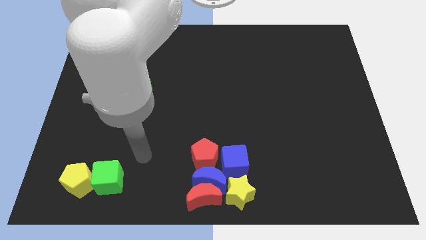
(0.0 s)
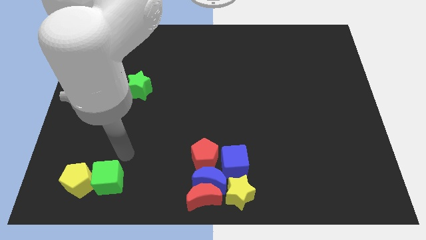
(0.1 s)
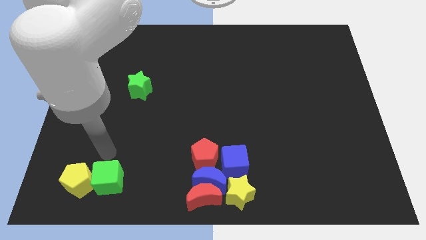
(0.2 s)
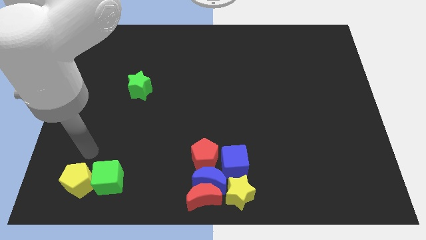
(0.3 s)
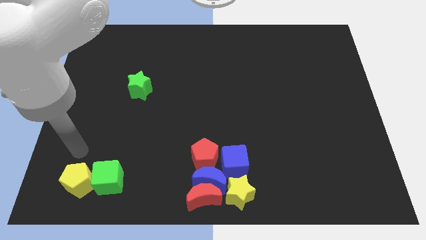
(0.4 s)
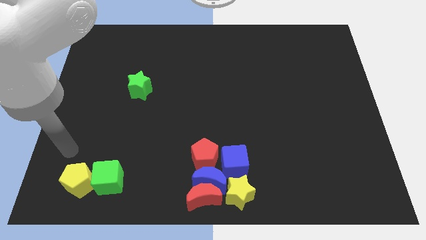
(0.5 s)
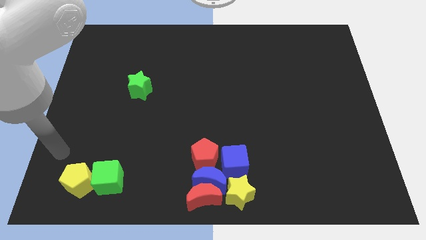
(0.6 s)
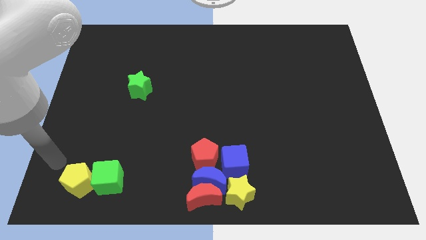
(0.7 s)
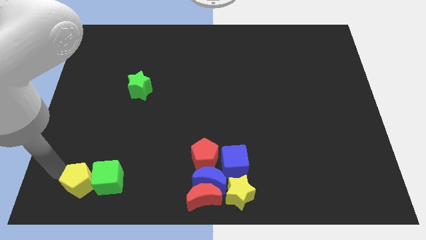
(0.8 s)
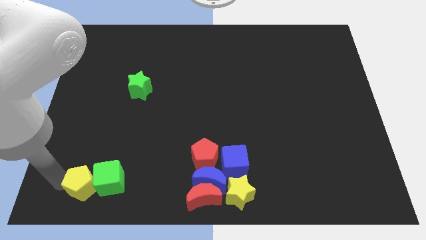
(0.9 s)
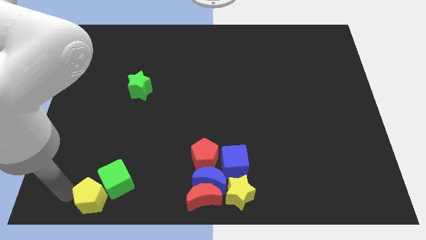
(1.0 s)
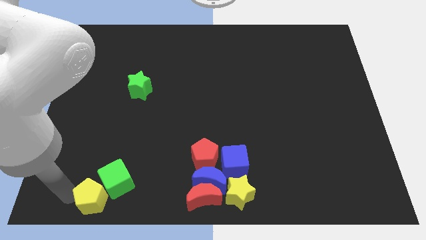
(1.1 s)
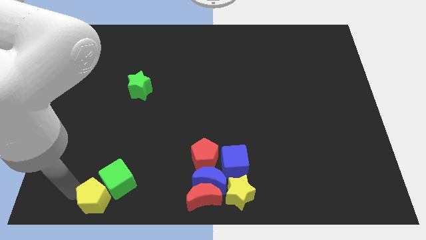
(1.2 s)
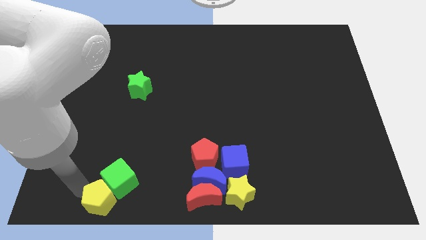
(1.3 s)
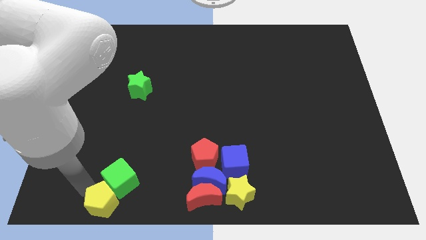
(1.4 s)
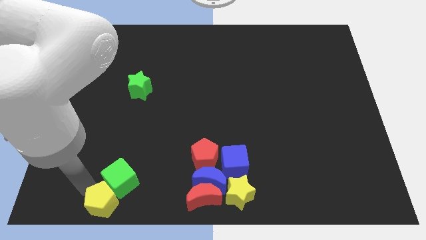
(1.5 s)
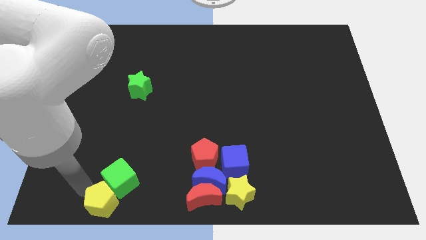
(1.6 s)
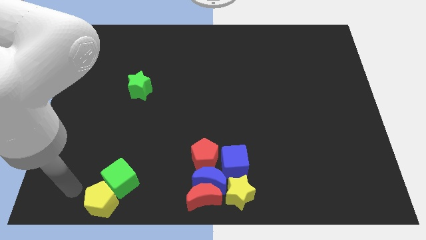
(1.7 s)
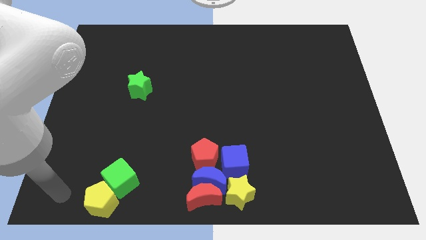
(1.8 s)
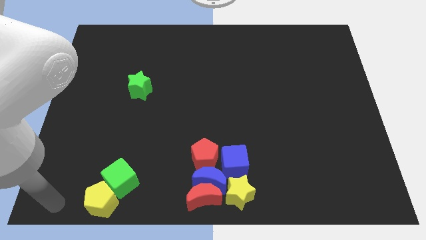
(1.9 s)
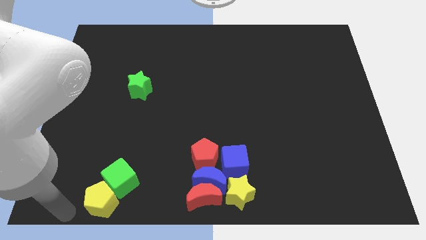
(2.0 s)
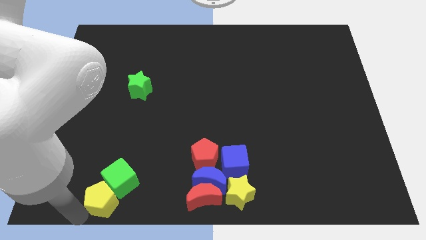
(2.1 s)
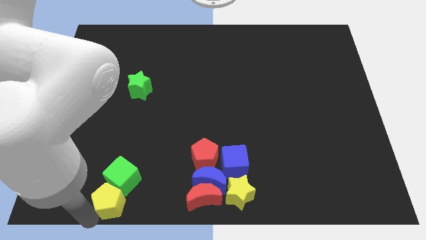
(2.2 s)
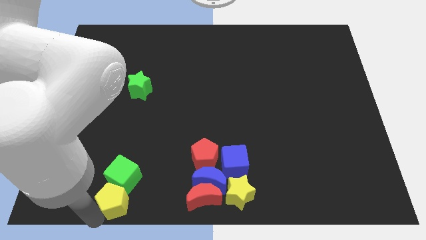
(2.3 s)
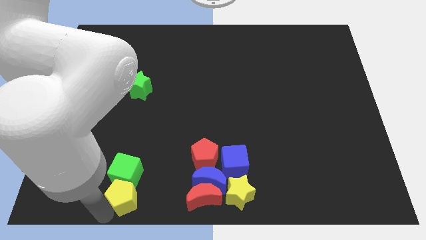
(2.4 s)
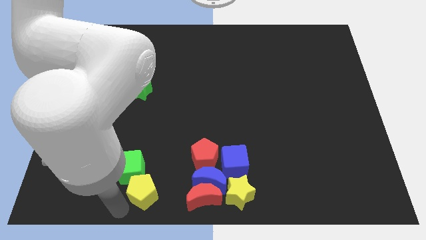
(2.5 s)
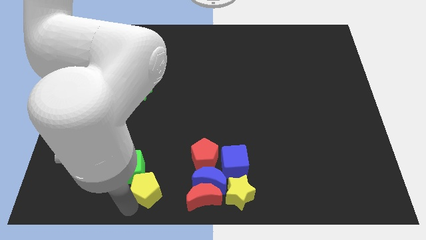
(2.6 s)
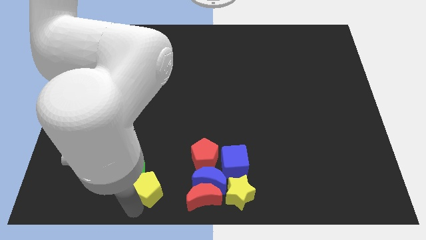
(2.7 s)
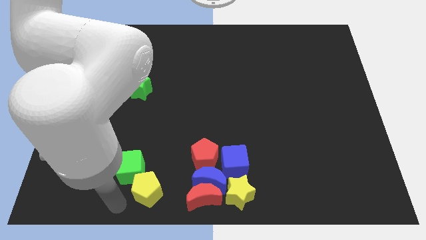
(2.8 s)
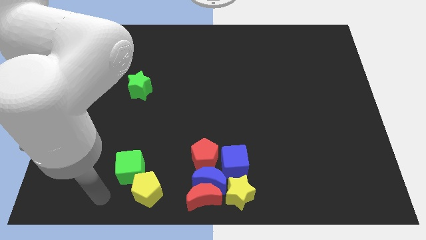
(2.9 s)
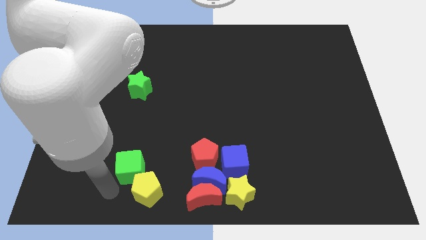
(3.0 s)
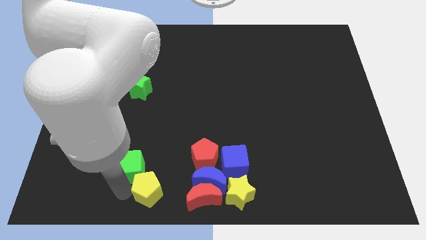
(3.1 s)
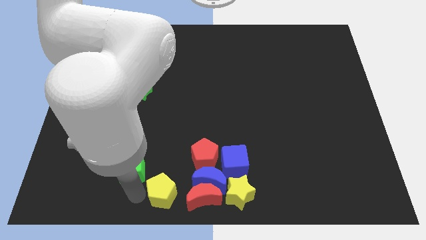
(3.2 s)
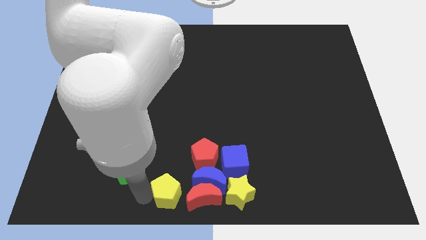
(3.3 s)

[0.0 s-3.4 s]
move the yellow pentagon to the left of red moon

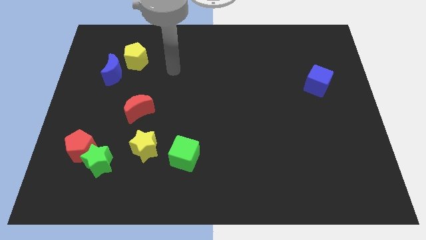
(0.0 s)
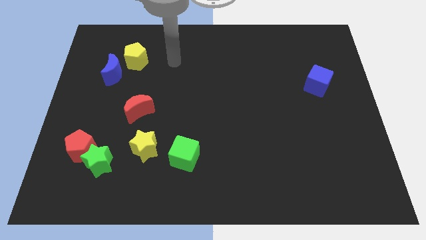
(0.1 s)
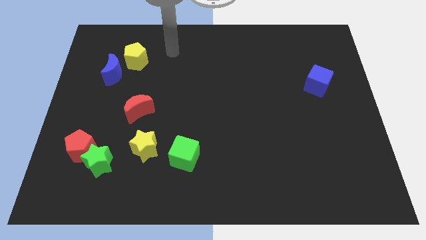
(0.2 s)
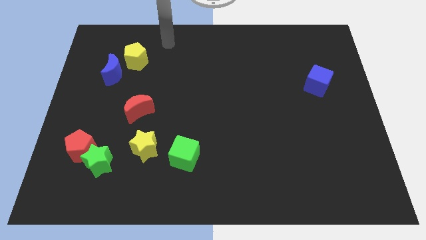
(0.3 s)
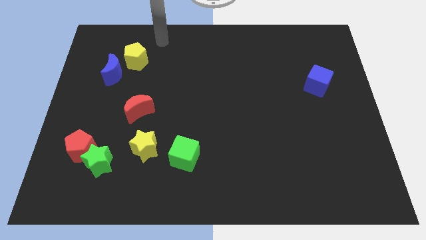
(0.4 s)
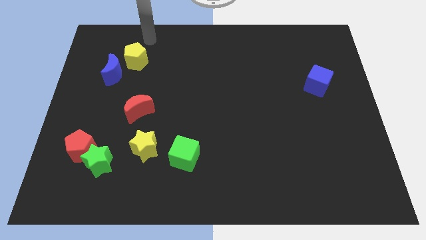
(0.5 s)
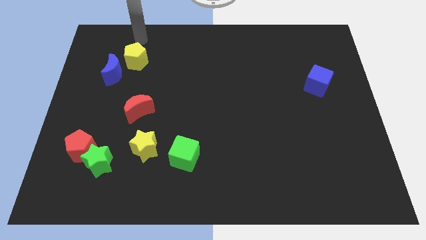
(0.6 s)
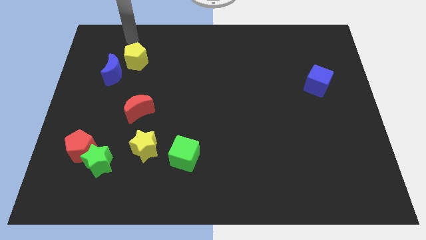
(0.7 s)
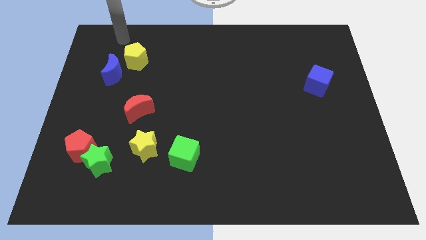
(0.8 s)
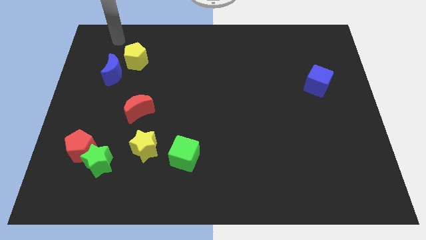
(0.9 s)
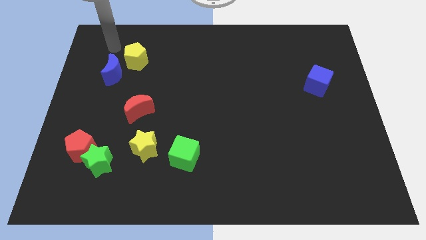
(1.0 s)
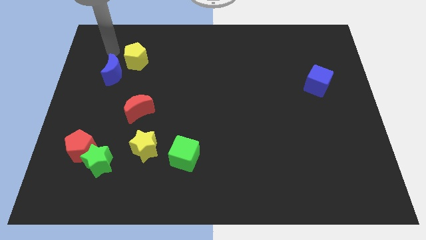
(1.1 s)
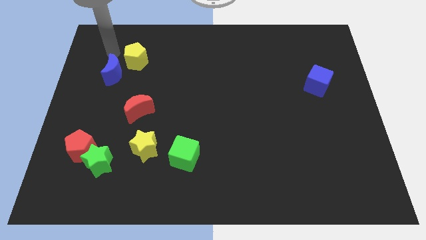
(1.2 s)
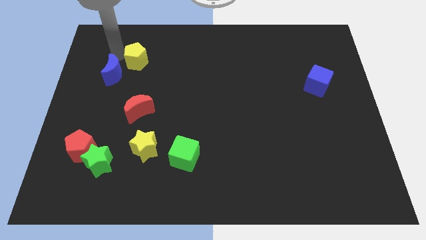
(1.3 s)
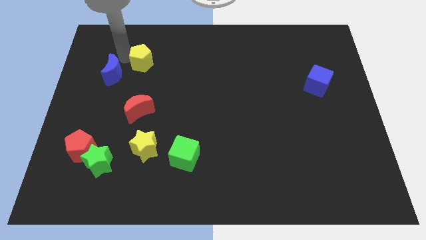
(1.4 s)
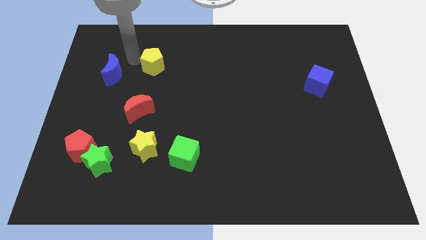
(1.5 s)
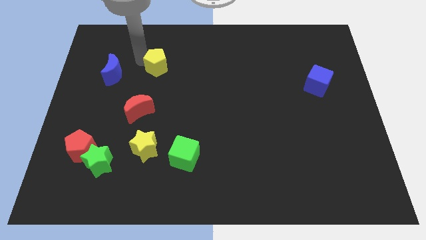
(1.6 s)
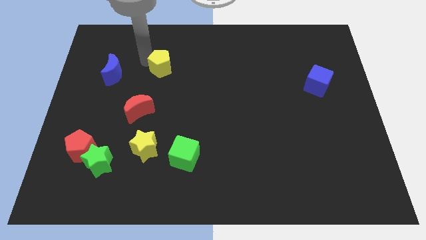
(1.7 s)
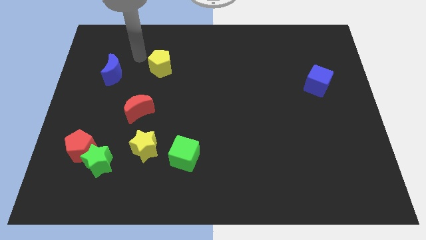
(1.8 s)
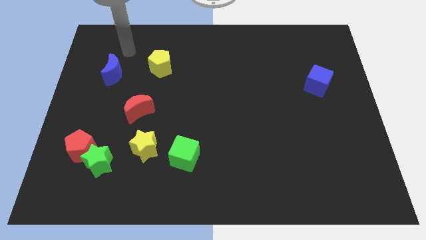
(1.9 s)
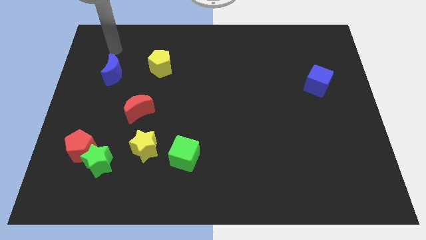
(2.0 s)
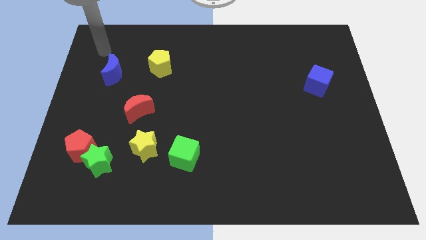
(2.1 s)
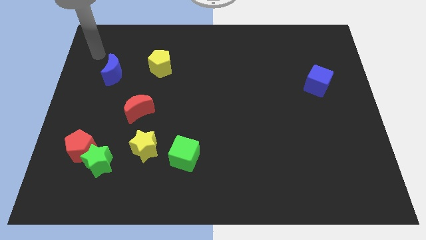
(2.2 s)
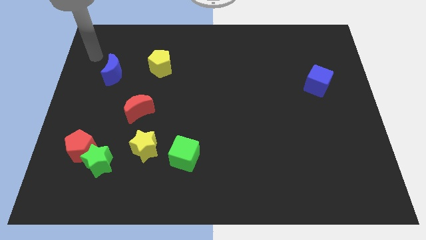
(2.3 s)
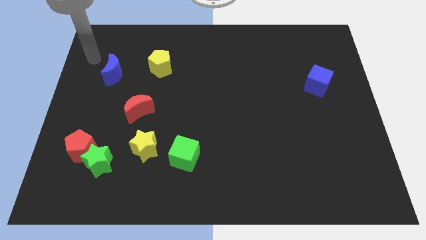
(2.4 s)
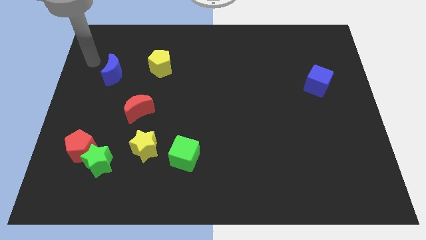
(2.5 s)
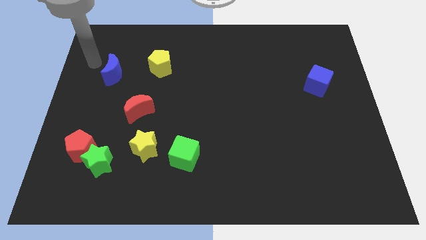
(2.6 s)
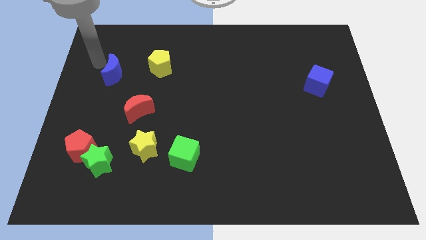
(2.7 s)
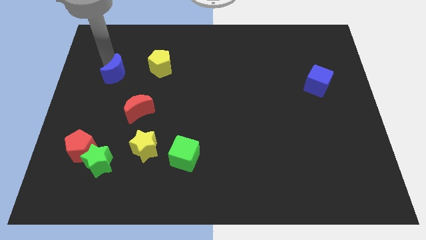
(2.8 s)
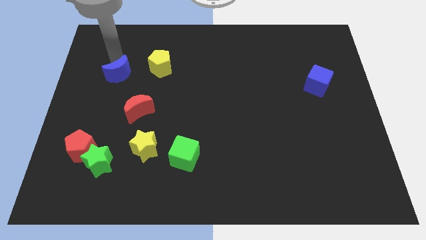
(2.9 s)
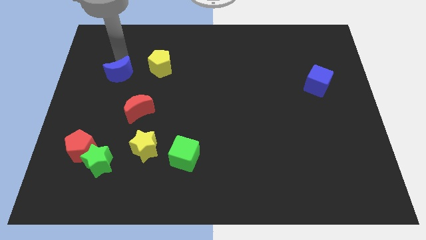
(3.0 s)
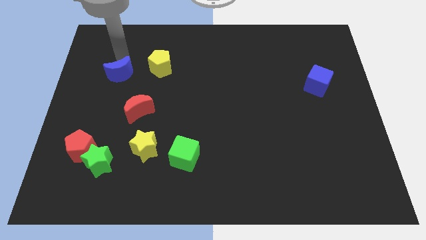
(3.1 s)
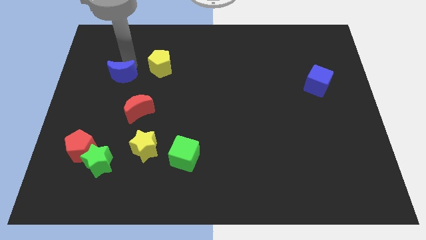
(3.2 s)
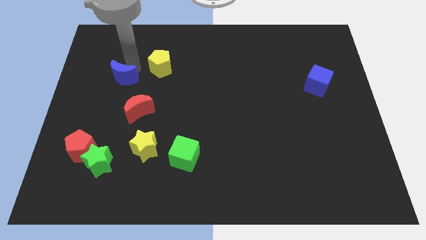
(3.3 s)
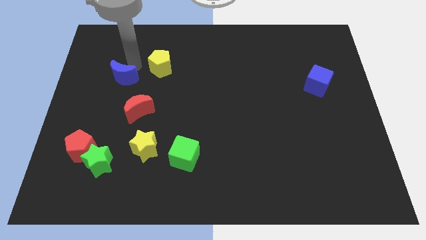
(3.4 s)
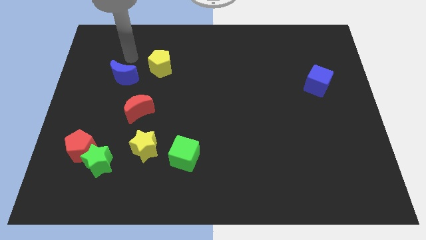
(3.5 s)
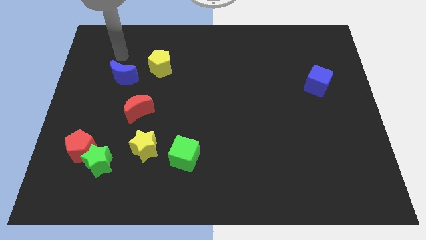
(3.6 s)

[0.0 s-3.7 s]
slightly slide the yellow pentagon to right of the board

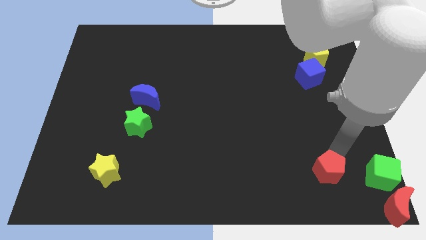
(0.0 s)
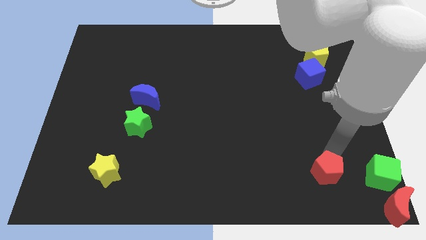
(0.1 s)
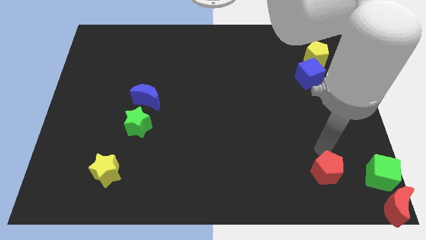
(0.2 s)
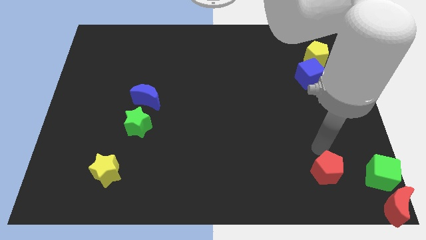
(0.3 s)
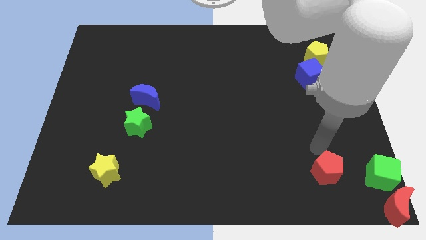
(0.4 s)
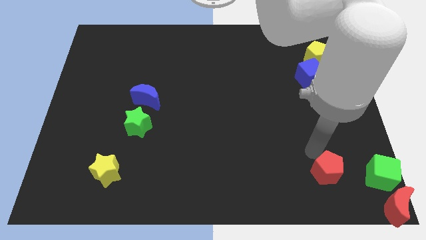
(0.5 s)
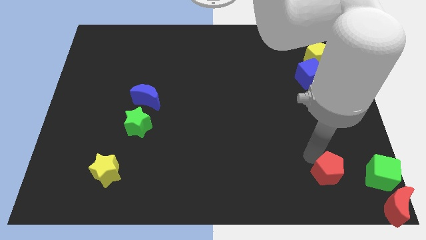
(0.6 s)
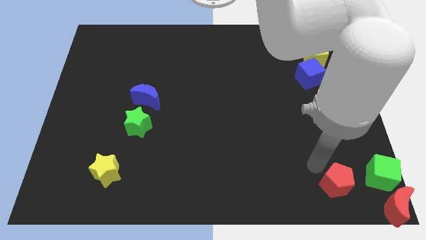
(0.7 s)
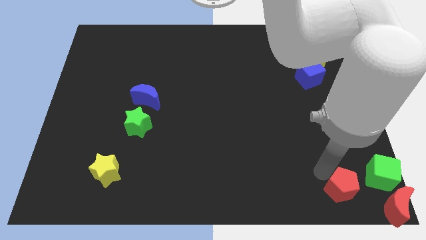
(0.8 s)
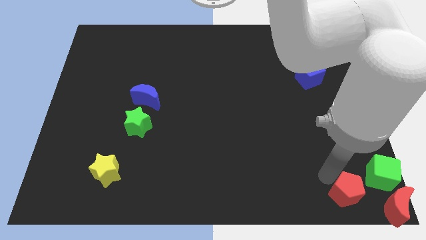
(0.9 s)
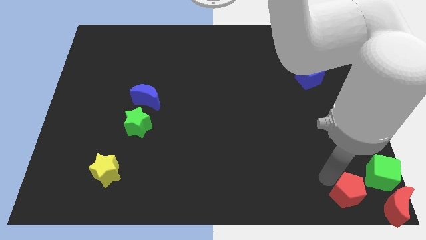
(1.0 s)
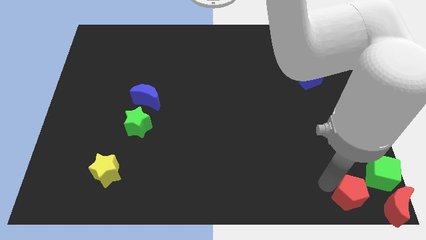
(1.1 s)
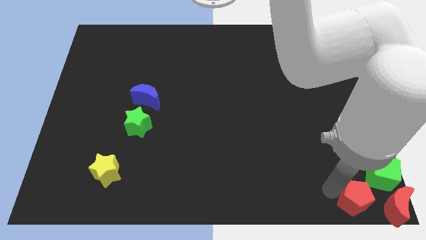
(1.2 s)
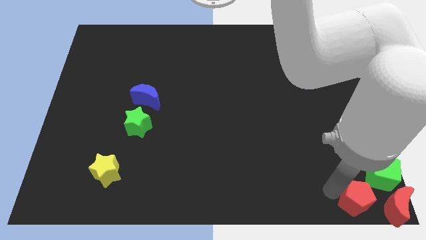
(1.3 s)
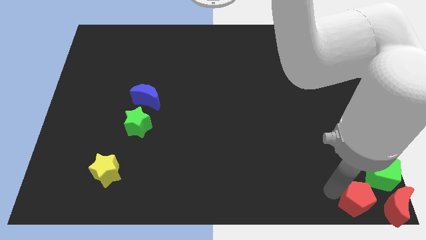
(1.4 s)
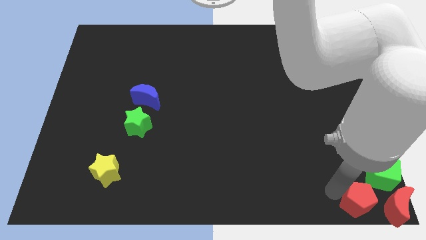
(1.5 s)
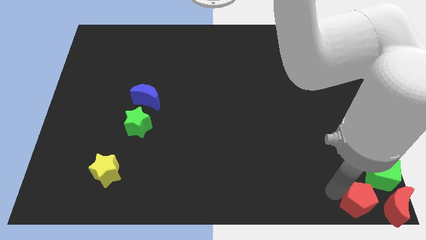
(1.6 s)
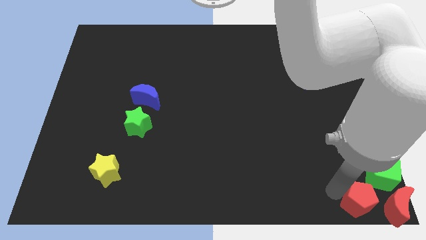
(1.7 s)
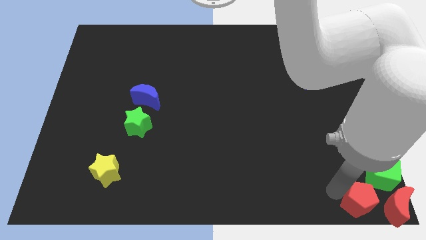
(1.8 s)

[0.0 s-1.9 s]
move the red pentagon to the left side of the red moon
